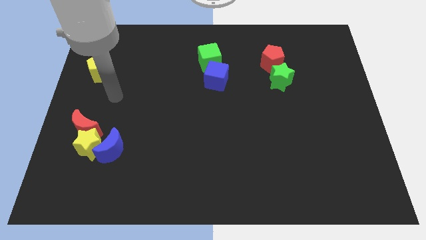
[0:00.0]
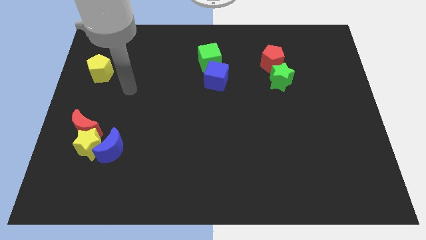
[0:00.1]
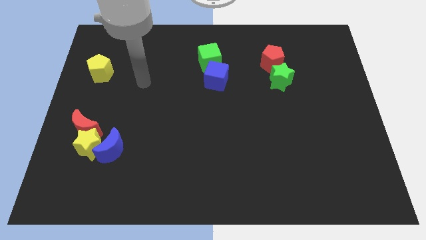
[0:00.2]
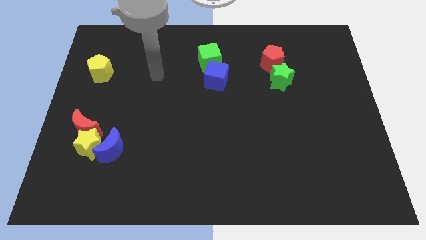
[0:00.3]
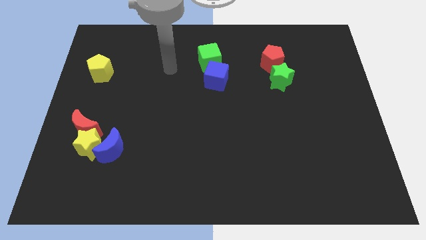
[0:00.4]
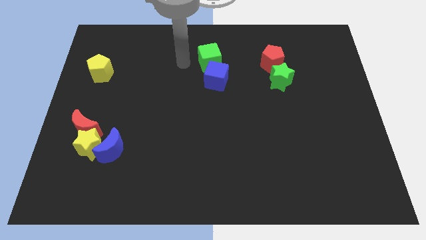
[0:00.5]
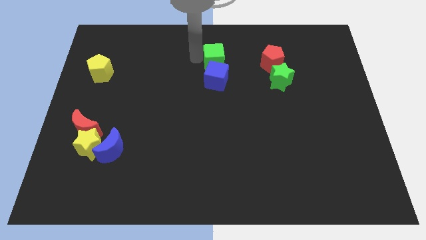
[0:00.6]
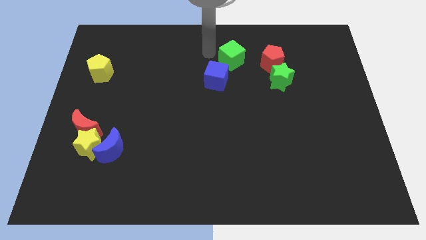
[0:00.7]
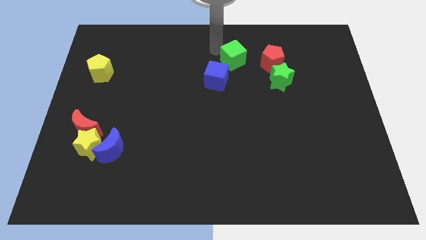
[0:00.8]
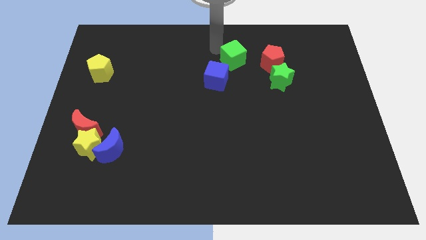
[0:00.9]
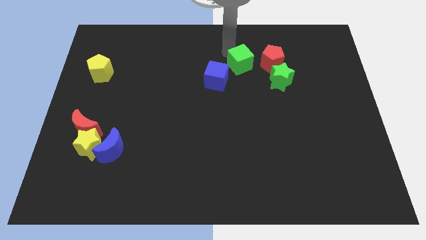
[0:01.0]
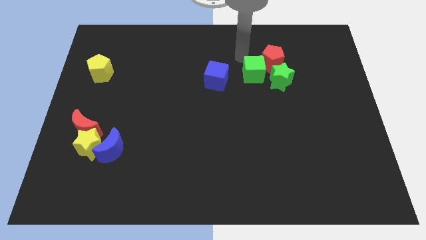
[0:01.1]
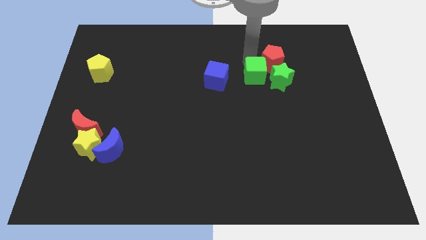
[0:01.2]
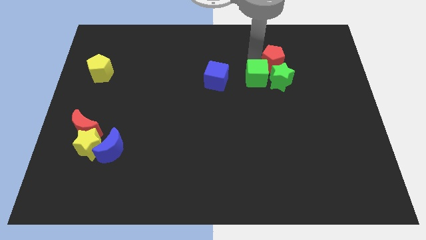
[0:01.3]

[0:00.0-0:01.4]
place green cube to the left of green star

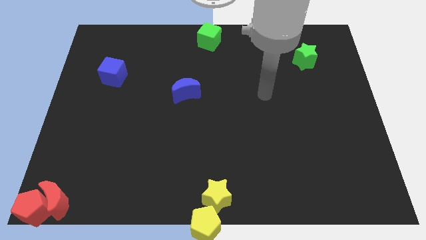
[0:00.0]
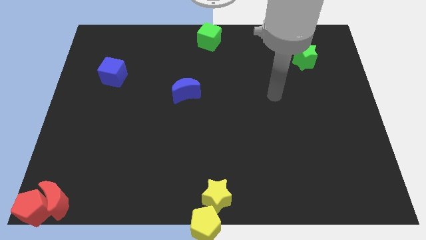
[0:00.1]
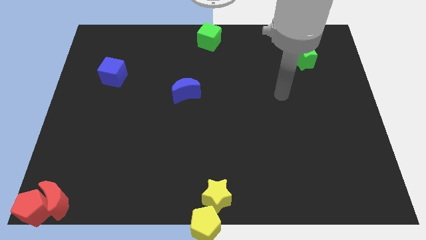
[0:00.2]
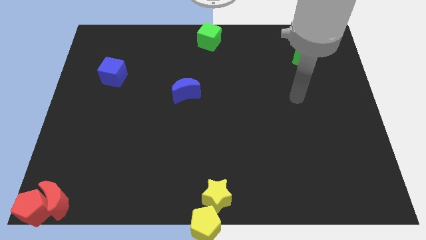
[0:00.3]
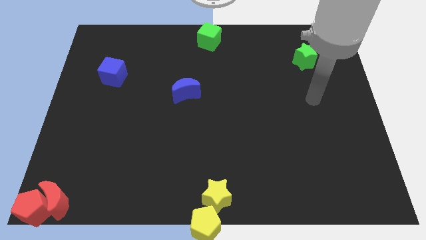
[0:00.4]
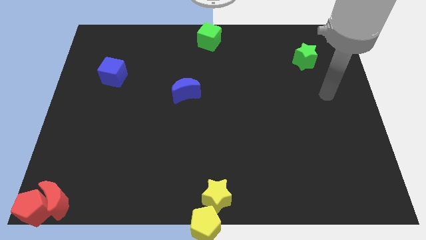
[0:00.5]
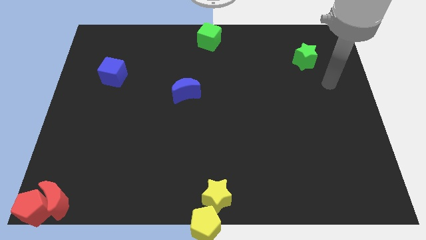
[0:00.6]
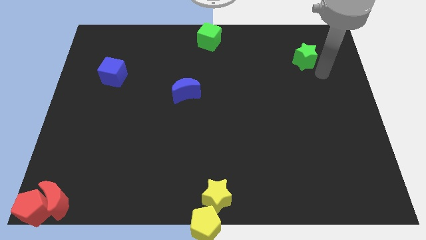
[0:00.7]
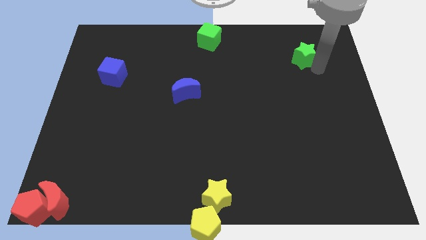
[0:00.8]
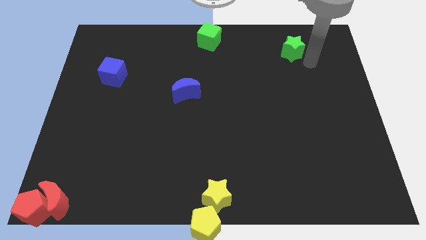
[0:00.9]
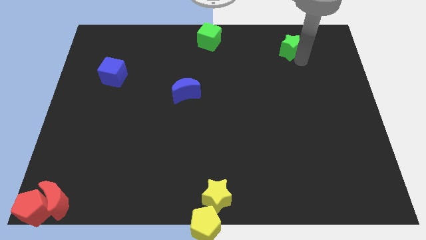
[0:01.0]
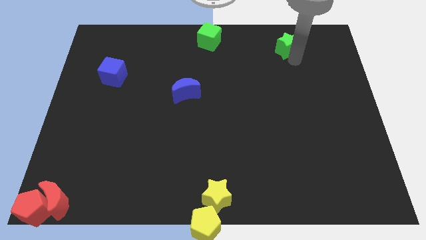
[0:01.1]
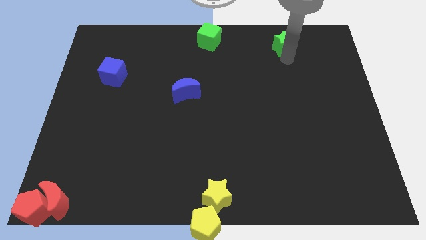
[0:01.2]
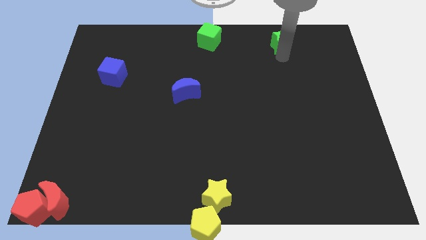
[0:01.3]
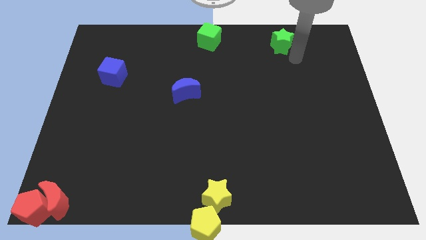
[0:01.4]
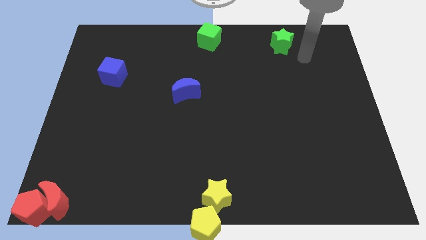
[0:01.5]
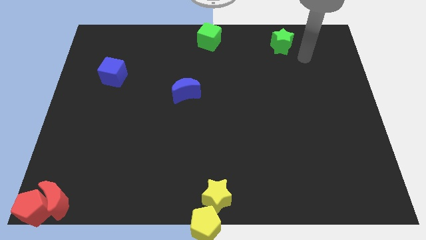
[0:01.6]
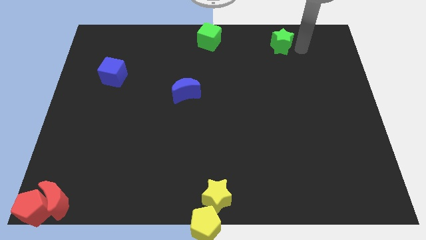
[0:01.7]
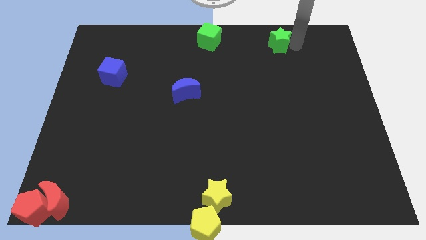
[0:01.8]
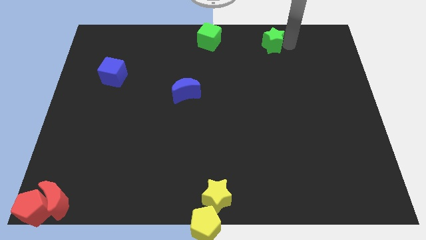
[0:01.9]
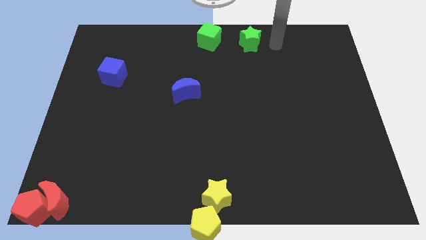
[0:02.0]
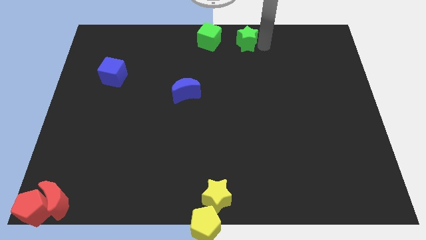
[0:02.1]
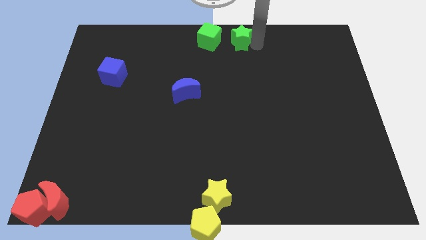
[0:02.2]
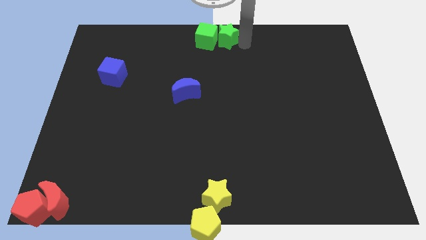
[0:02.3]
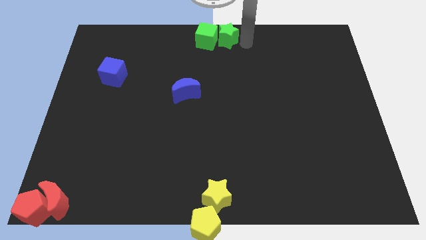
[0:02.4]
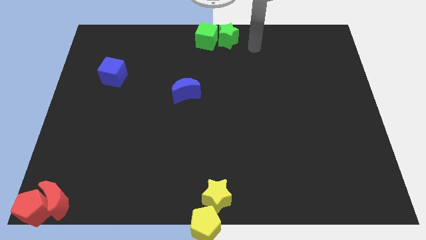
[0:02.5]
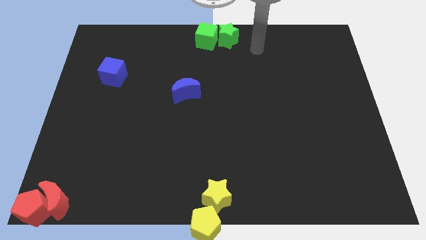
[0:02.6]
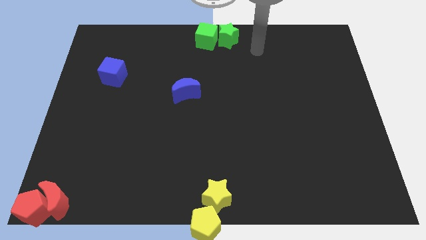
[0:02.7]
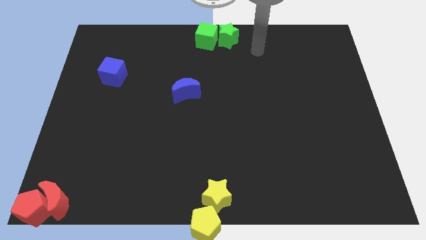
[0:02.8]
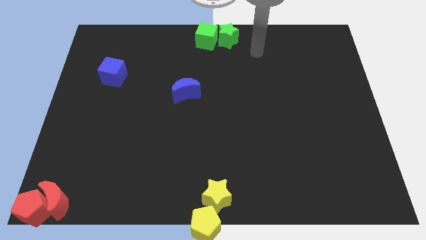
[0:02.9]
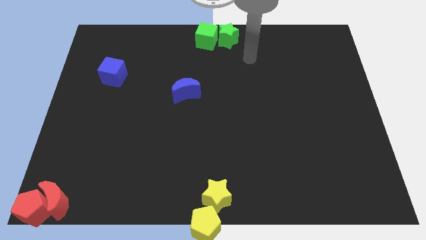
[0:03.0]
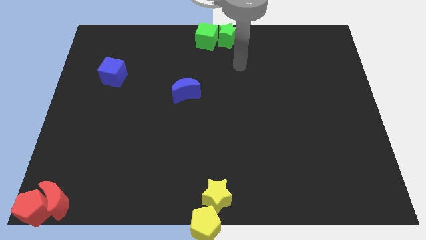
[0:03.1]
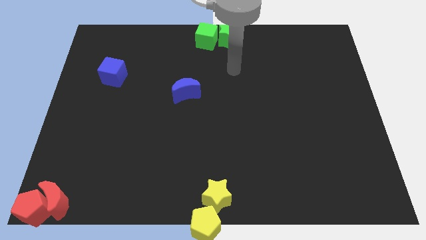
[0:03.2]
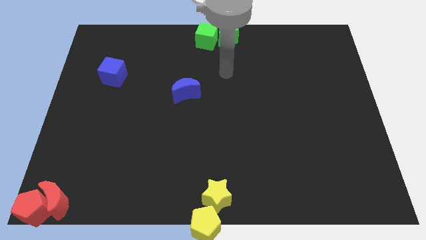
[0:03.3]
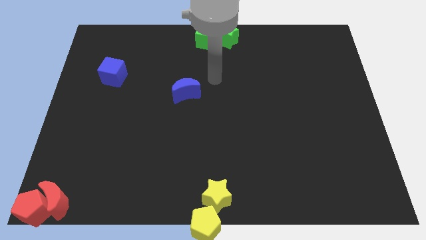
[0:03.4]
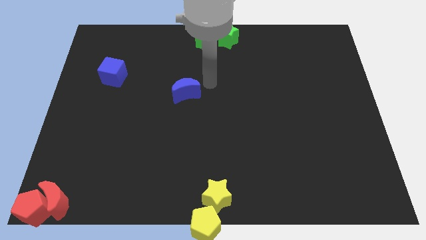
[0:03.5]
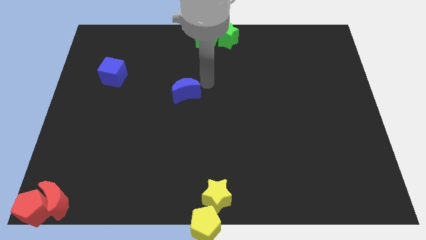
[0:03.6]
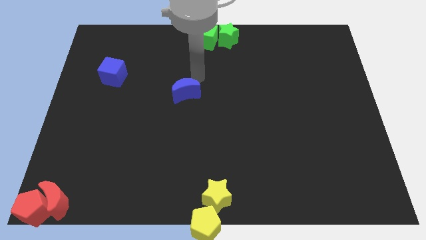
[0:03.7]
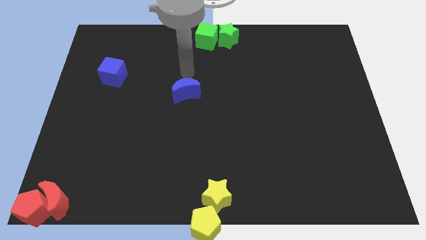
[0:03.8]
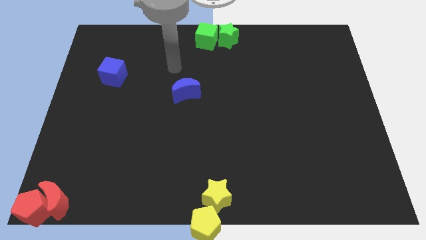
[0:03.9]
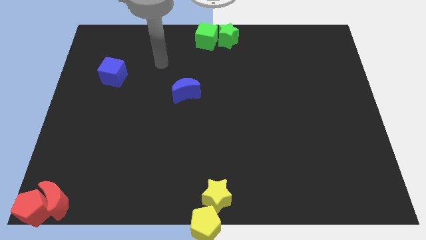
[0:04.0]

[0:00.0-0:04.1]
slide green star to the right of green cube

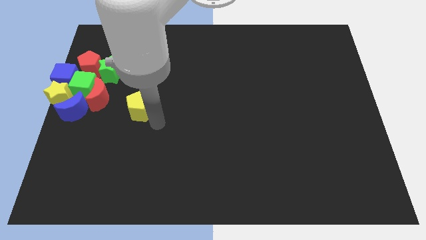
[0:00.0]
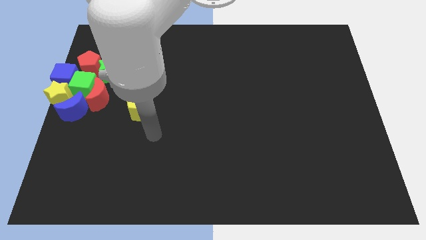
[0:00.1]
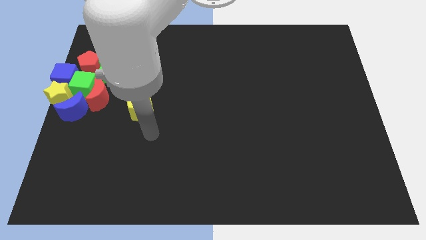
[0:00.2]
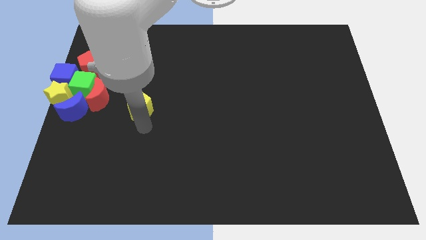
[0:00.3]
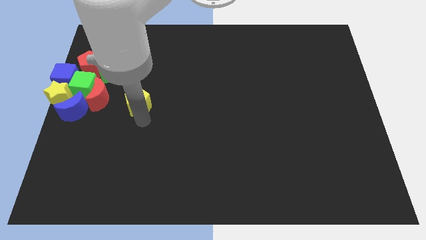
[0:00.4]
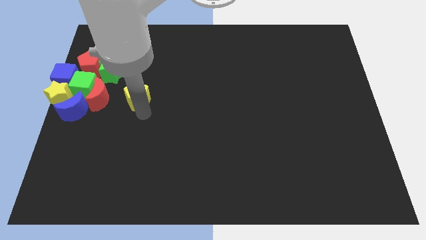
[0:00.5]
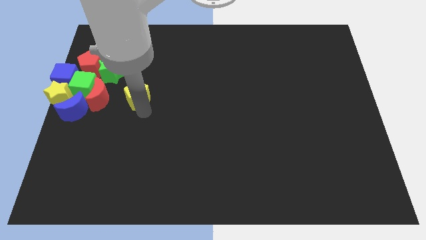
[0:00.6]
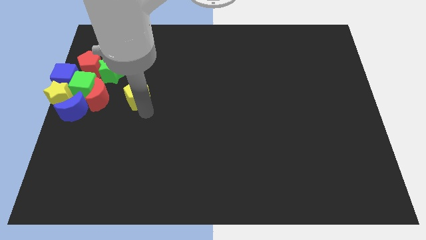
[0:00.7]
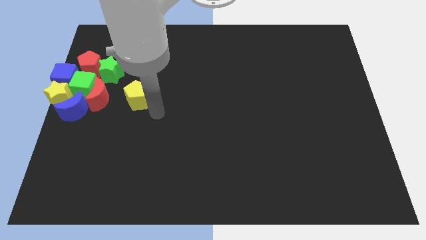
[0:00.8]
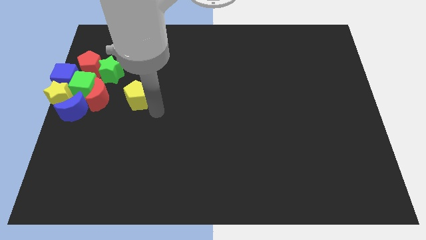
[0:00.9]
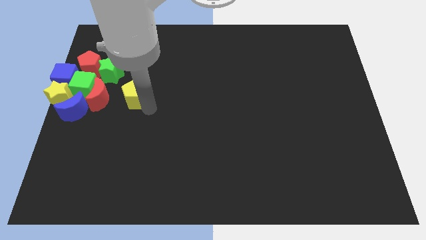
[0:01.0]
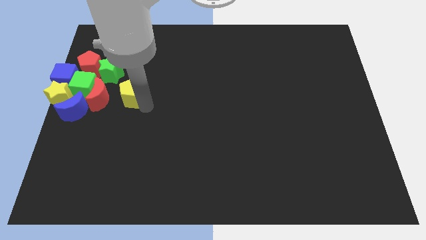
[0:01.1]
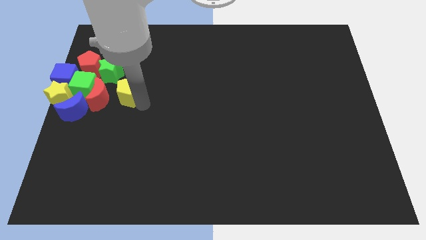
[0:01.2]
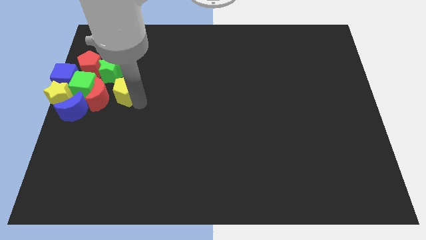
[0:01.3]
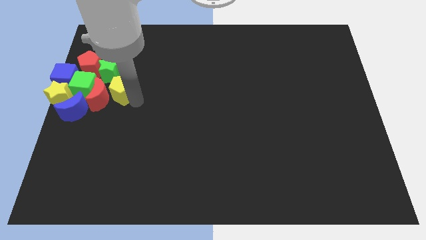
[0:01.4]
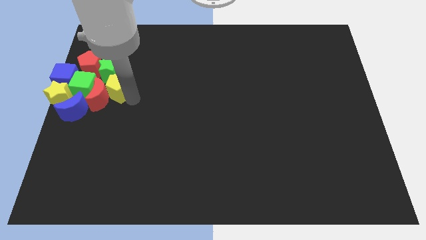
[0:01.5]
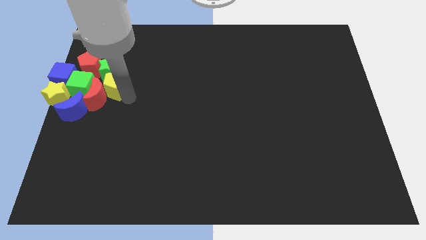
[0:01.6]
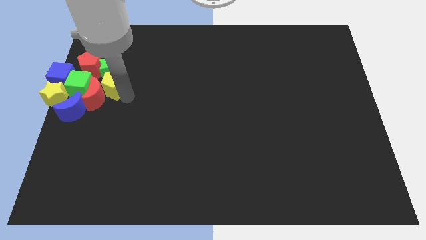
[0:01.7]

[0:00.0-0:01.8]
slide the yellow pentagon into the green star

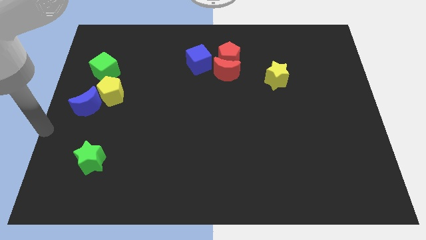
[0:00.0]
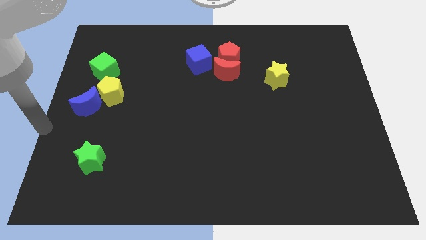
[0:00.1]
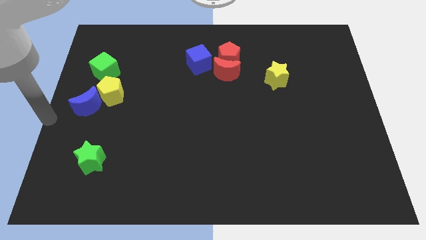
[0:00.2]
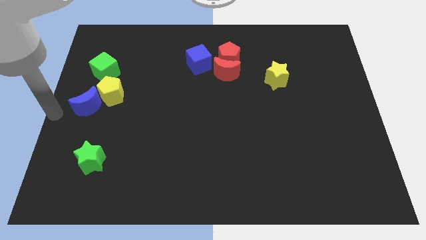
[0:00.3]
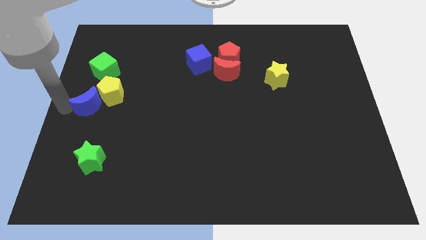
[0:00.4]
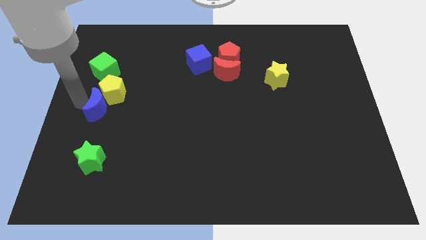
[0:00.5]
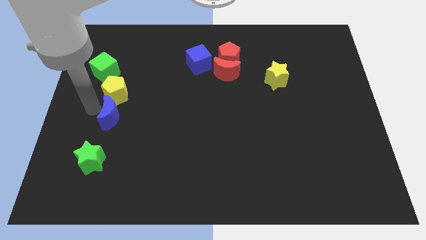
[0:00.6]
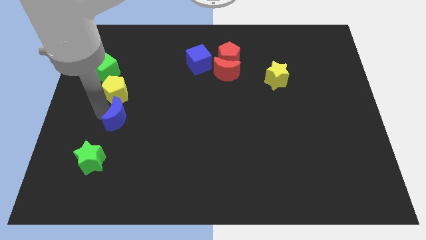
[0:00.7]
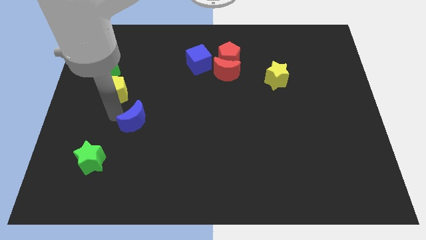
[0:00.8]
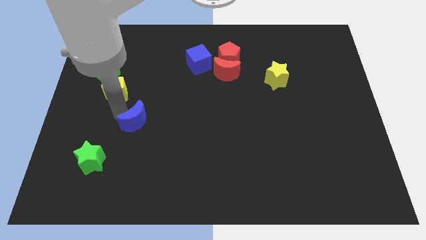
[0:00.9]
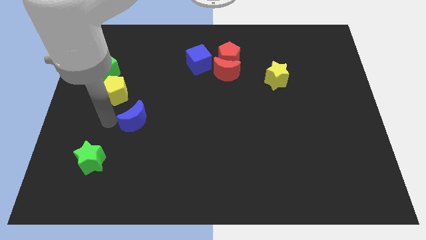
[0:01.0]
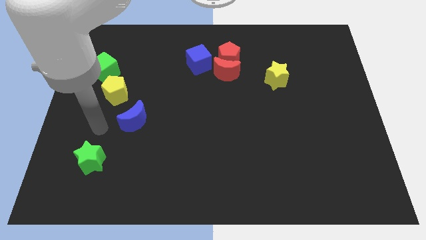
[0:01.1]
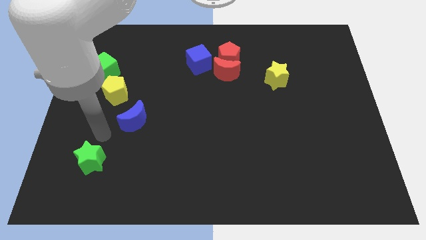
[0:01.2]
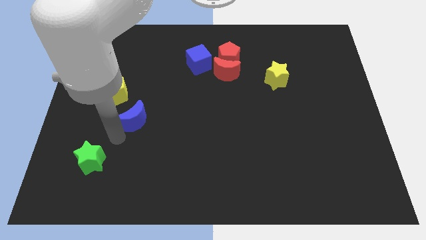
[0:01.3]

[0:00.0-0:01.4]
push the blue moon towards the right side of the board

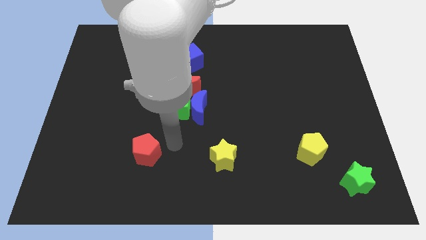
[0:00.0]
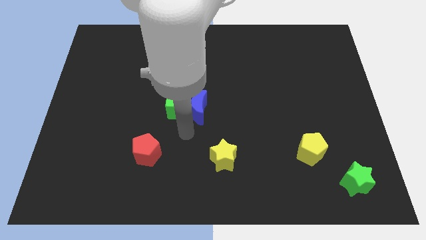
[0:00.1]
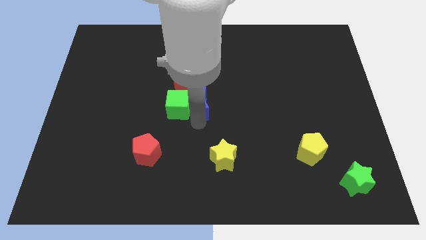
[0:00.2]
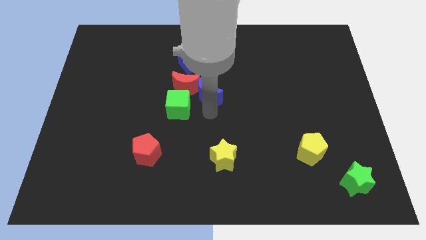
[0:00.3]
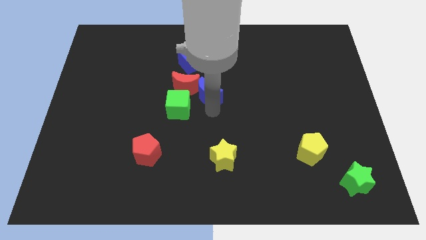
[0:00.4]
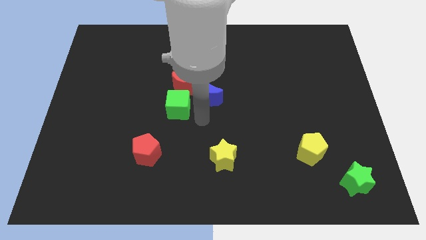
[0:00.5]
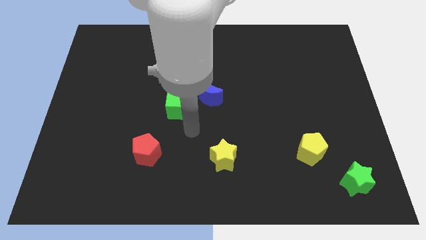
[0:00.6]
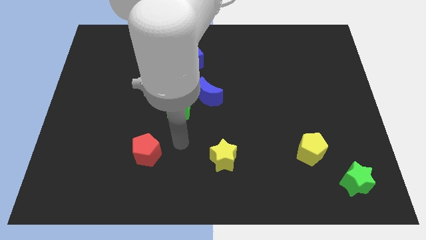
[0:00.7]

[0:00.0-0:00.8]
push the blue crescent to the top of the board
